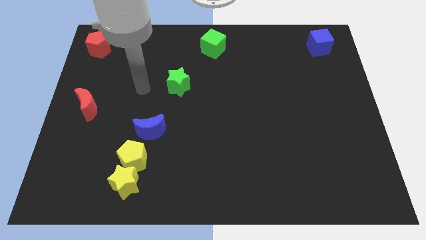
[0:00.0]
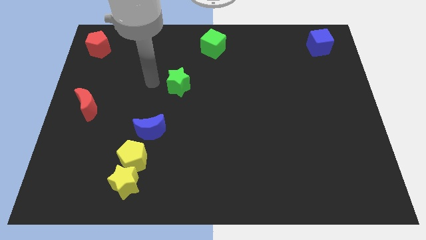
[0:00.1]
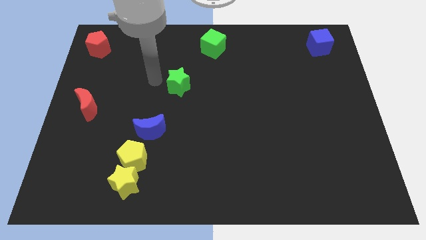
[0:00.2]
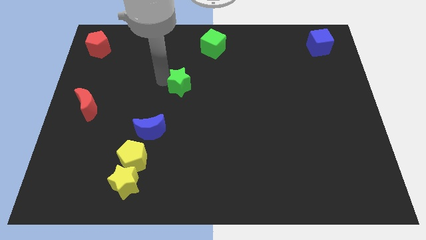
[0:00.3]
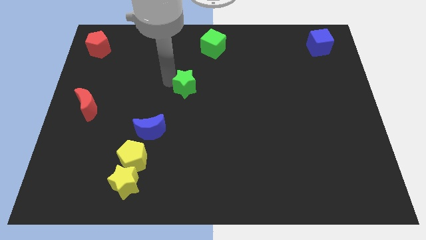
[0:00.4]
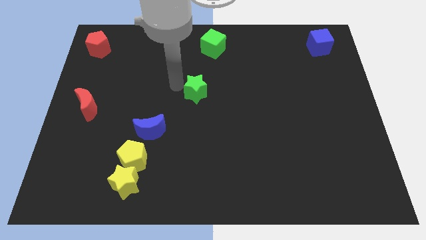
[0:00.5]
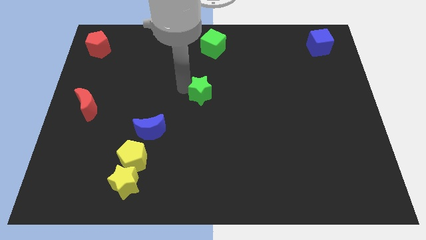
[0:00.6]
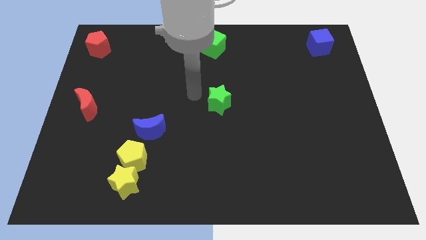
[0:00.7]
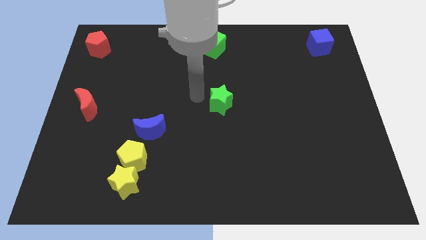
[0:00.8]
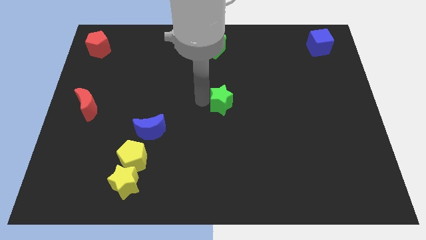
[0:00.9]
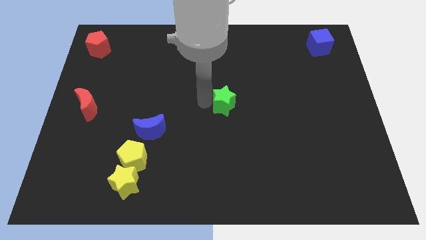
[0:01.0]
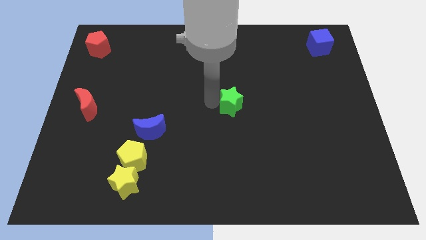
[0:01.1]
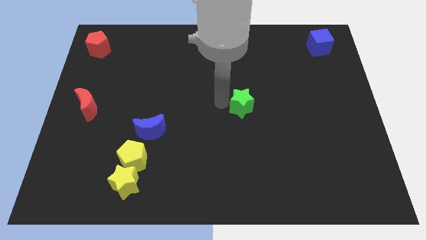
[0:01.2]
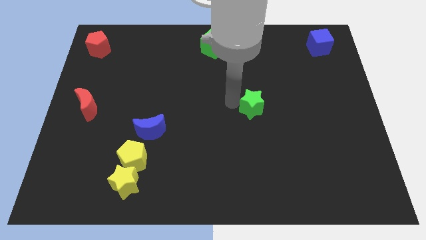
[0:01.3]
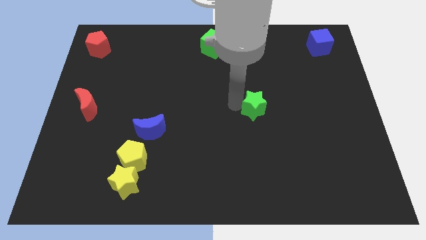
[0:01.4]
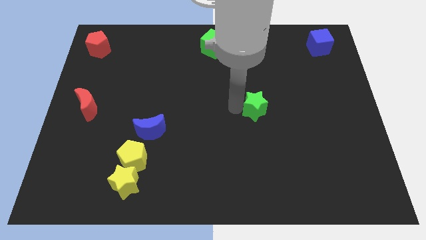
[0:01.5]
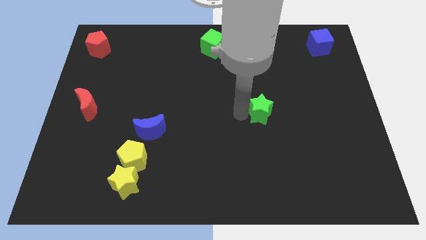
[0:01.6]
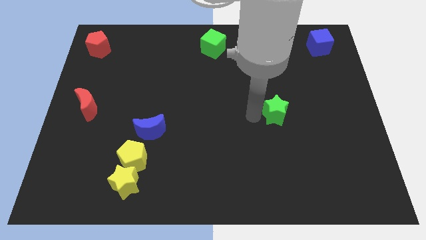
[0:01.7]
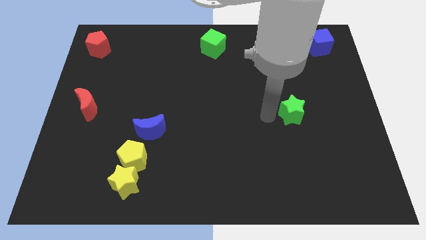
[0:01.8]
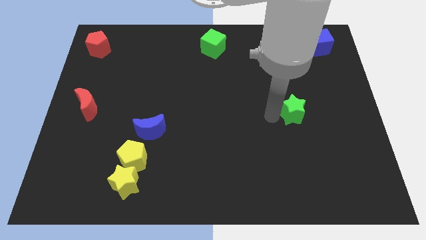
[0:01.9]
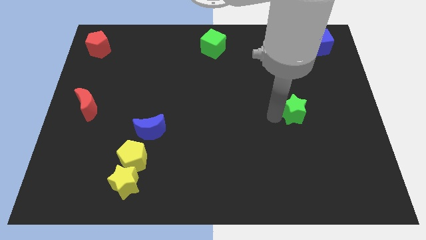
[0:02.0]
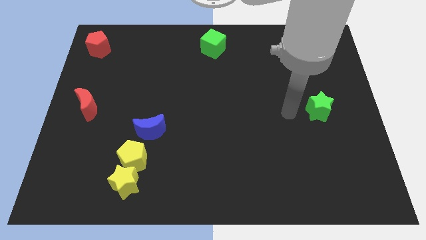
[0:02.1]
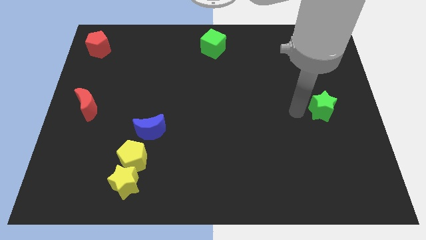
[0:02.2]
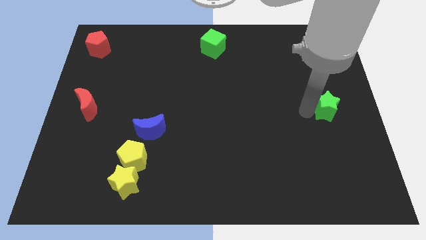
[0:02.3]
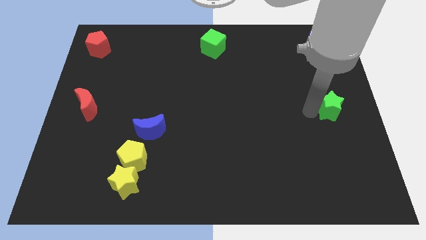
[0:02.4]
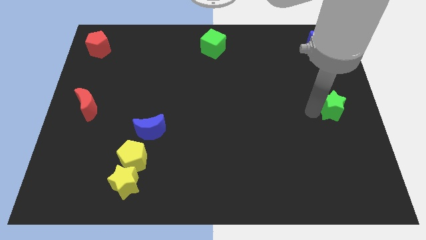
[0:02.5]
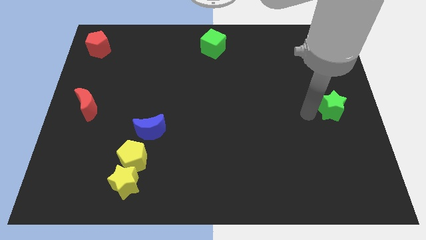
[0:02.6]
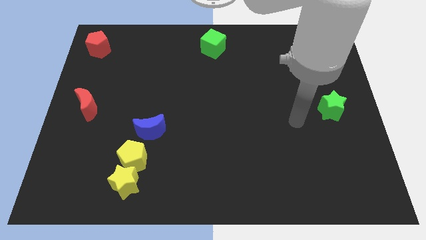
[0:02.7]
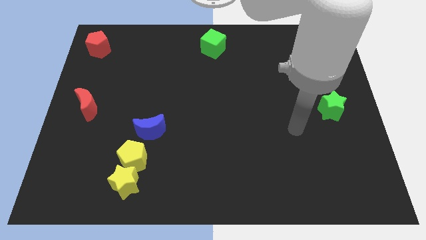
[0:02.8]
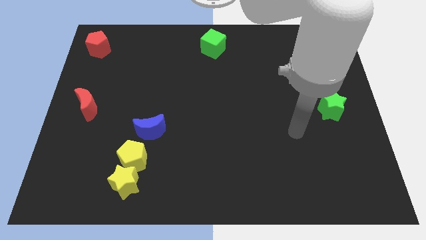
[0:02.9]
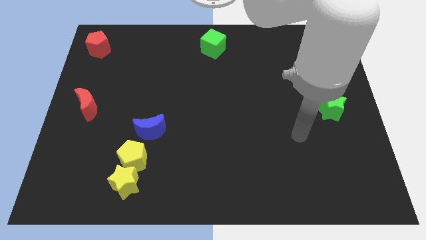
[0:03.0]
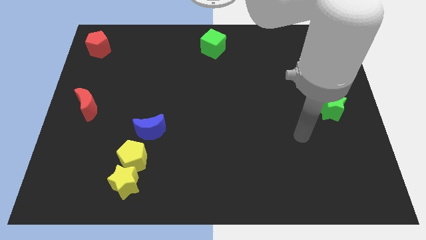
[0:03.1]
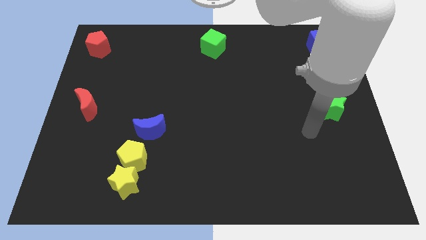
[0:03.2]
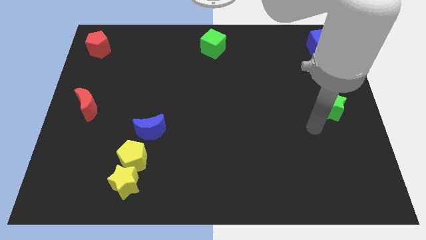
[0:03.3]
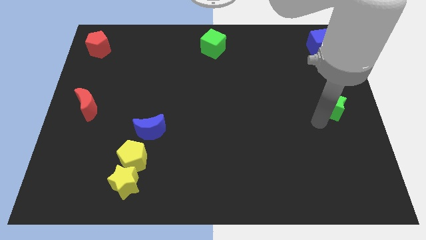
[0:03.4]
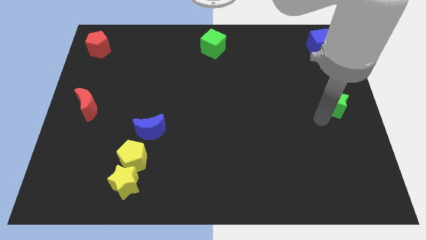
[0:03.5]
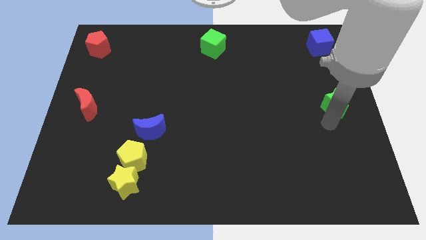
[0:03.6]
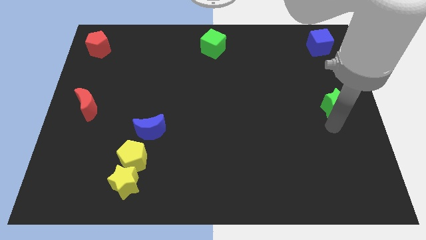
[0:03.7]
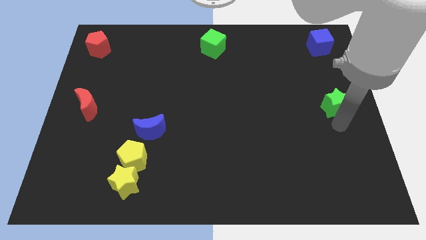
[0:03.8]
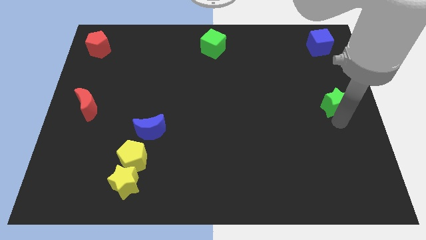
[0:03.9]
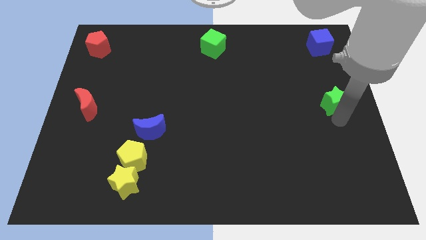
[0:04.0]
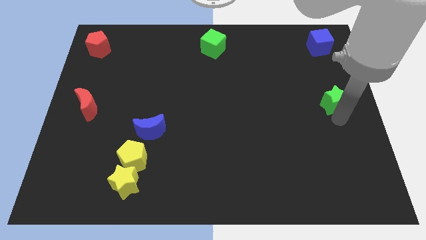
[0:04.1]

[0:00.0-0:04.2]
drag the green star vertically below the blue cube

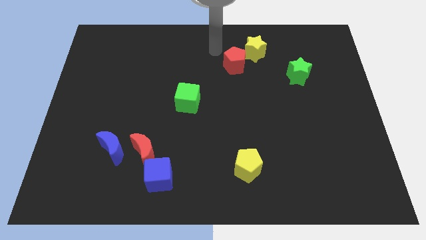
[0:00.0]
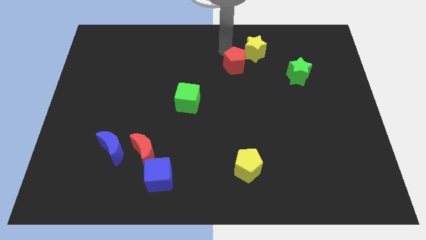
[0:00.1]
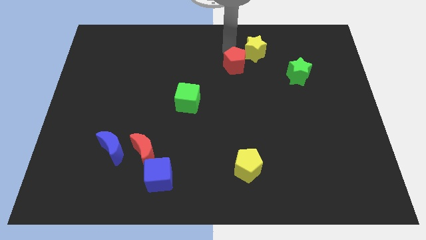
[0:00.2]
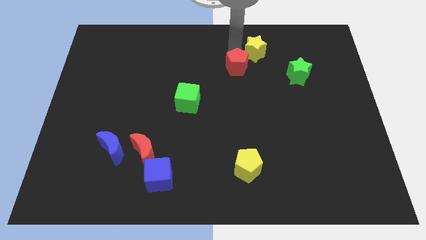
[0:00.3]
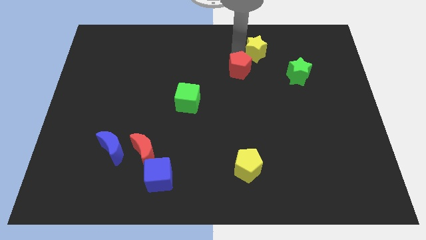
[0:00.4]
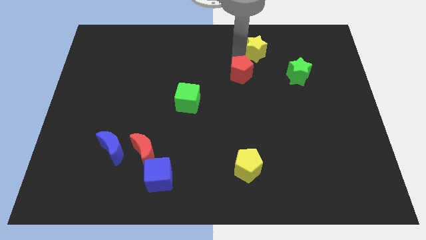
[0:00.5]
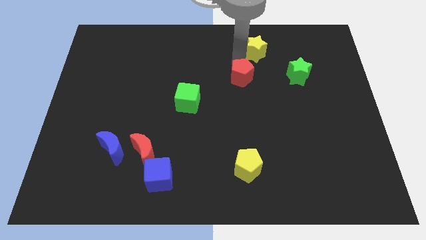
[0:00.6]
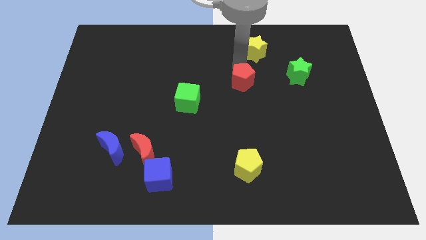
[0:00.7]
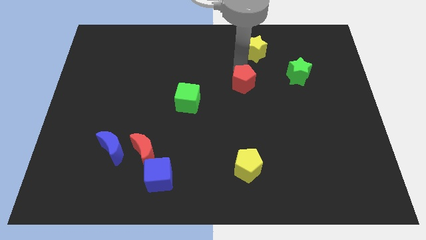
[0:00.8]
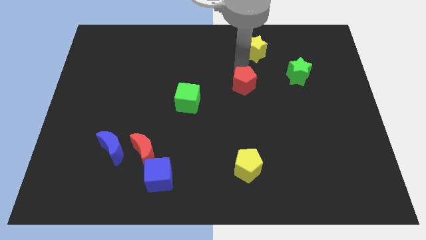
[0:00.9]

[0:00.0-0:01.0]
move the red pentagon to the center

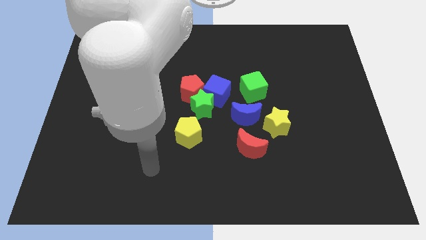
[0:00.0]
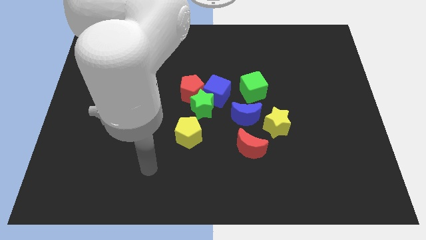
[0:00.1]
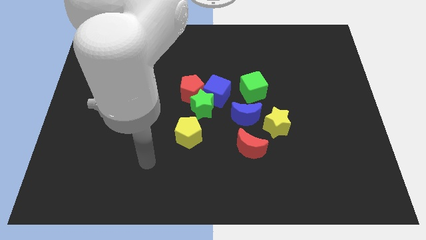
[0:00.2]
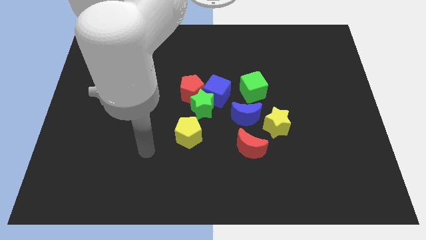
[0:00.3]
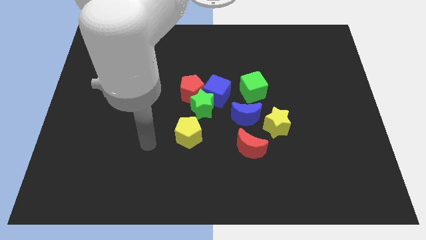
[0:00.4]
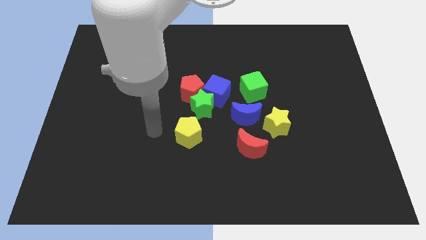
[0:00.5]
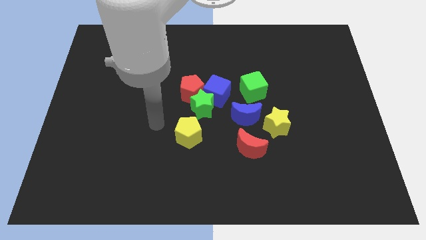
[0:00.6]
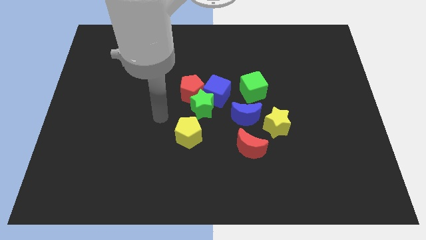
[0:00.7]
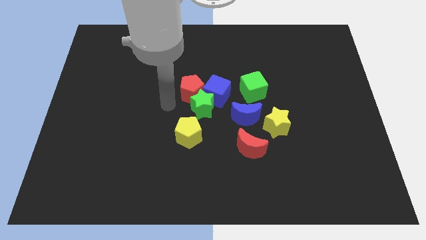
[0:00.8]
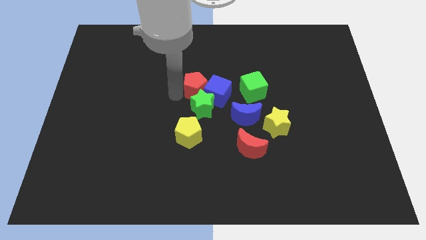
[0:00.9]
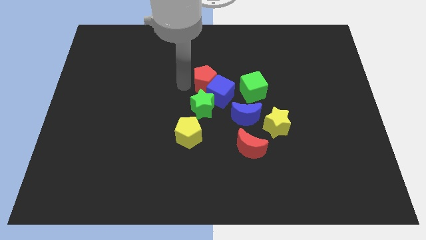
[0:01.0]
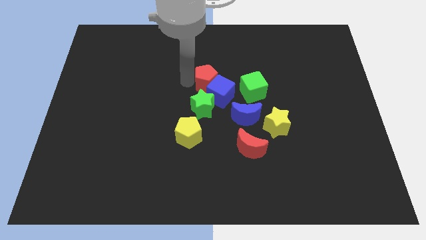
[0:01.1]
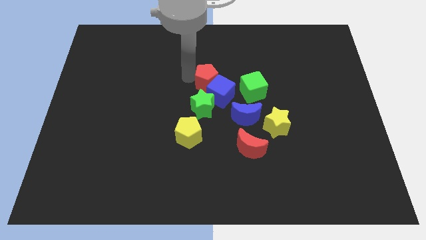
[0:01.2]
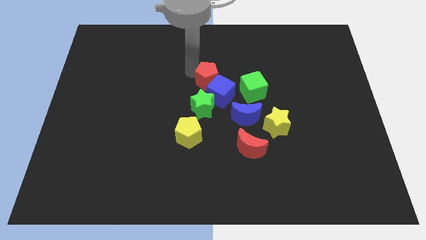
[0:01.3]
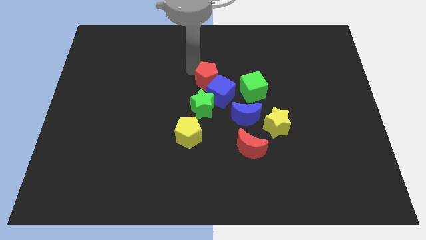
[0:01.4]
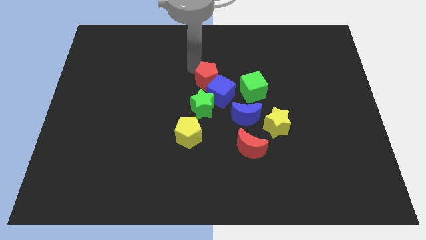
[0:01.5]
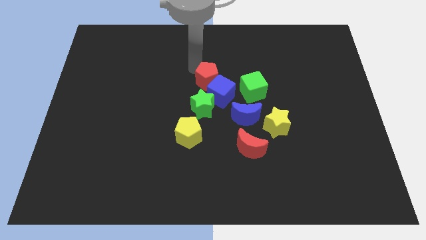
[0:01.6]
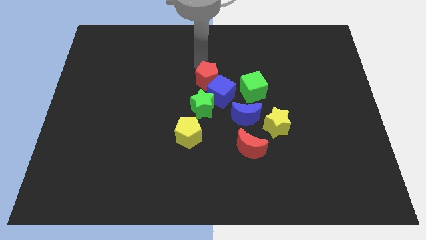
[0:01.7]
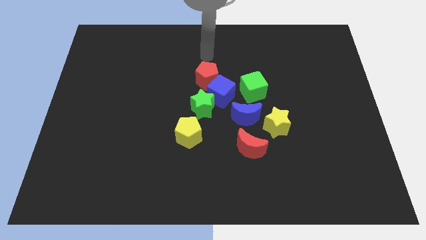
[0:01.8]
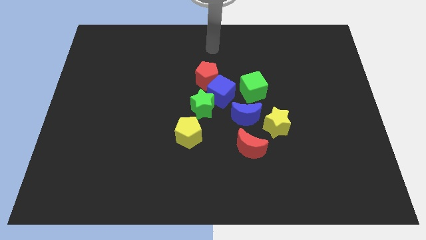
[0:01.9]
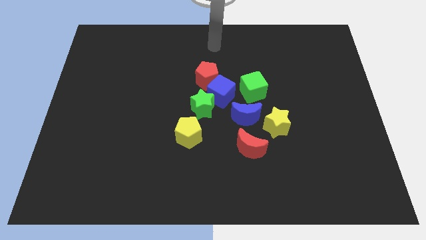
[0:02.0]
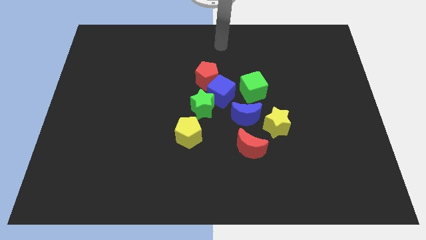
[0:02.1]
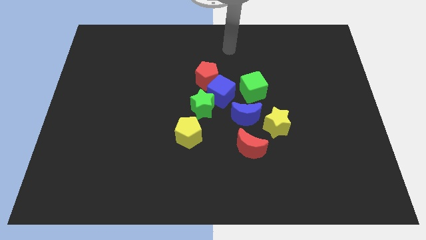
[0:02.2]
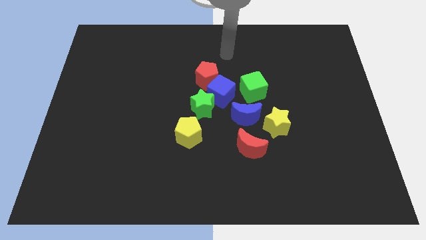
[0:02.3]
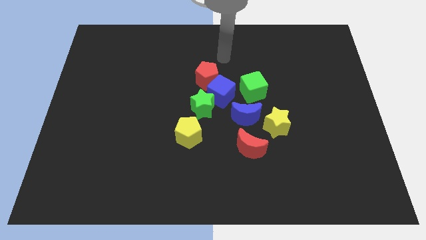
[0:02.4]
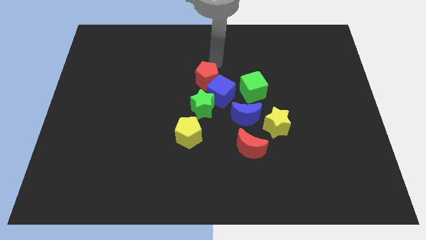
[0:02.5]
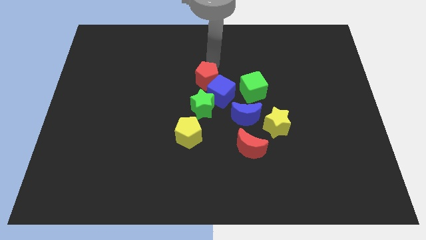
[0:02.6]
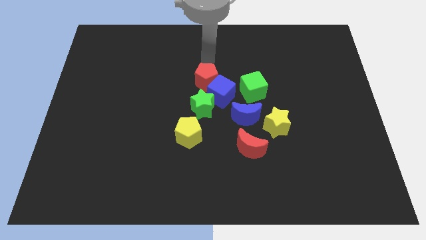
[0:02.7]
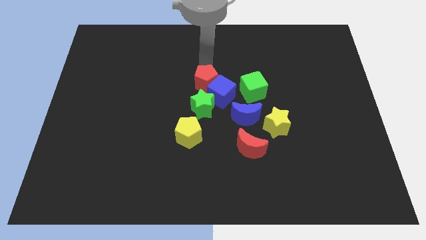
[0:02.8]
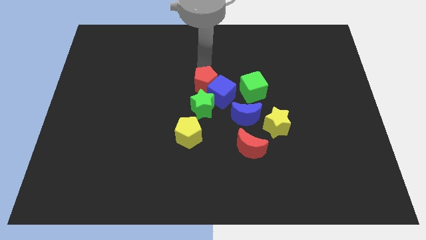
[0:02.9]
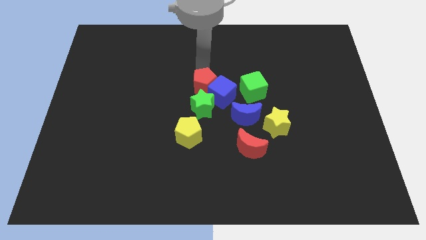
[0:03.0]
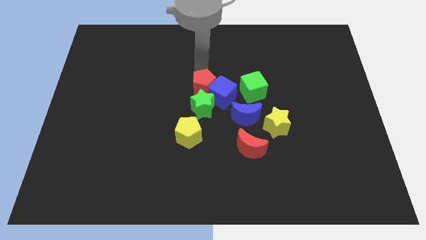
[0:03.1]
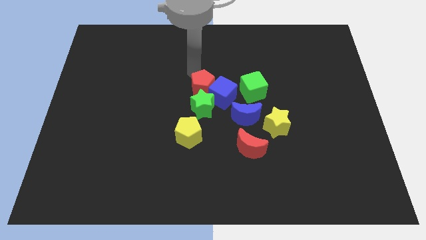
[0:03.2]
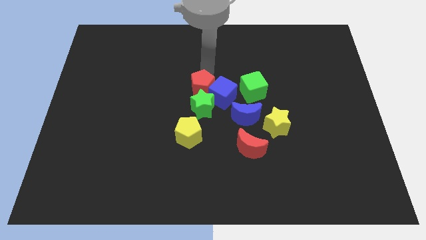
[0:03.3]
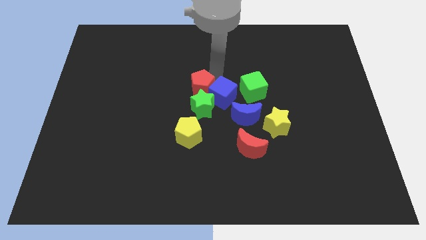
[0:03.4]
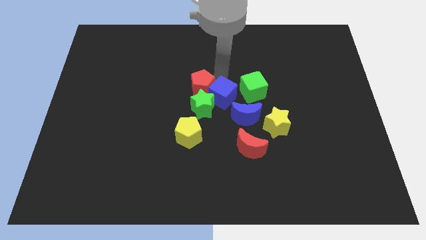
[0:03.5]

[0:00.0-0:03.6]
move the red pentagon to the left of the blue cube

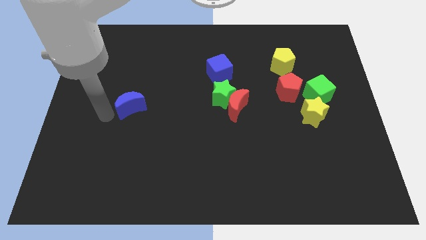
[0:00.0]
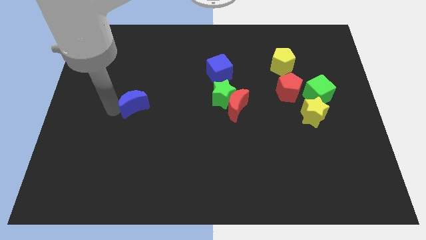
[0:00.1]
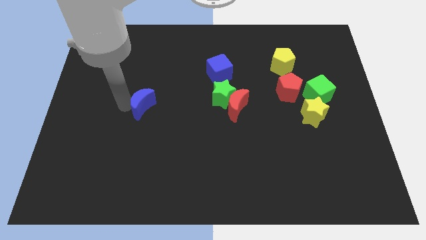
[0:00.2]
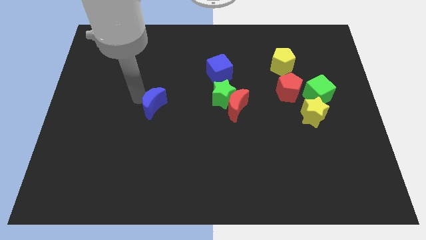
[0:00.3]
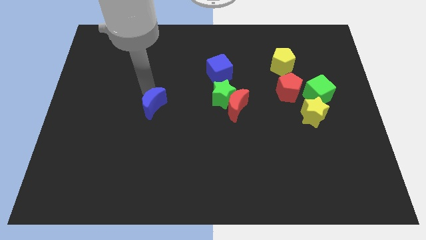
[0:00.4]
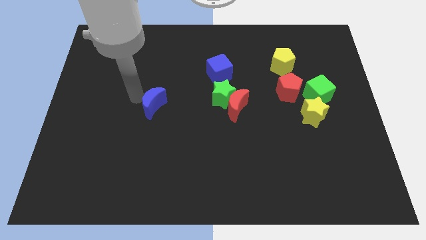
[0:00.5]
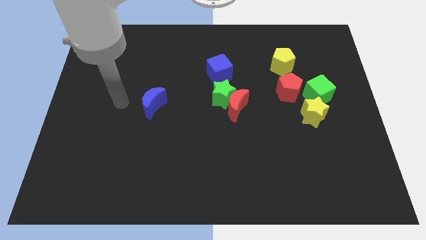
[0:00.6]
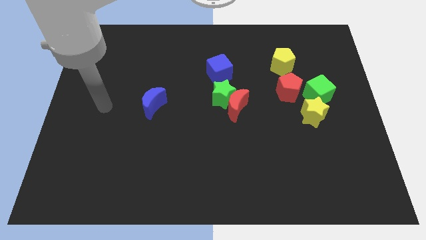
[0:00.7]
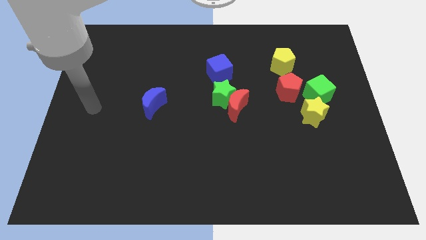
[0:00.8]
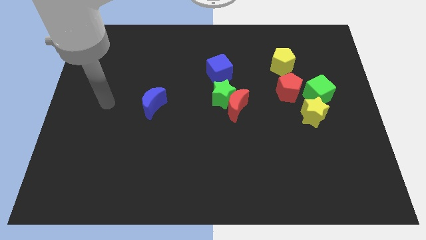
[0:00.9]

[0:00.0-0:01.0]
move the blue crescent to the left of the green star
